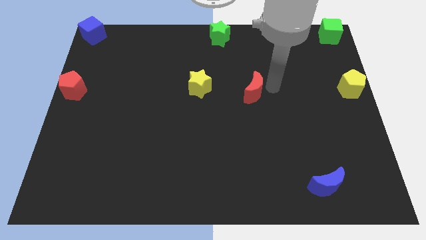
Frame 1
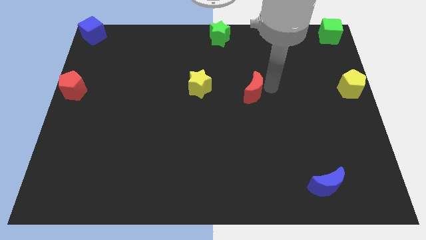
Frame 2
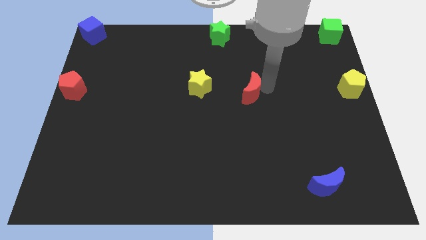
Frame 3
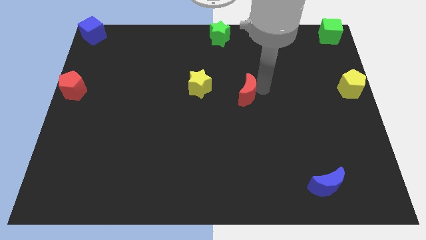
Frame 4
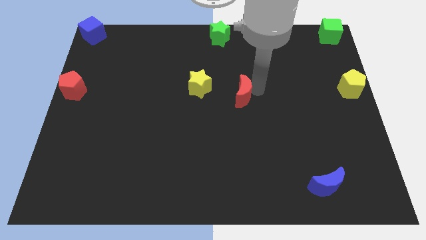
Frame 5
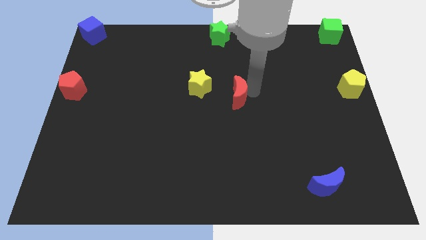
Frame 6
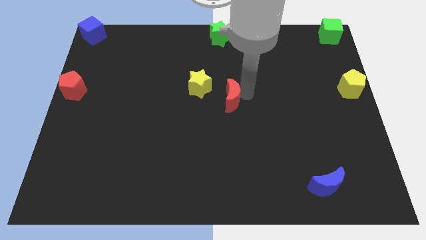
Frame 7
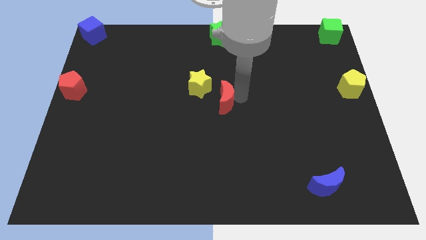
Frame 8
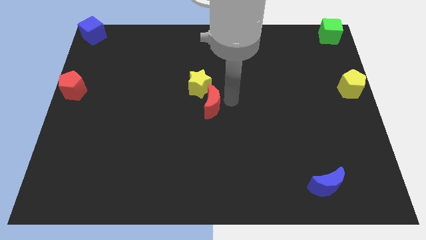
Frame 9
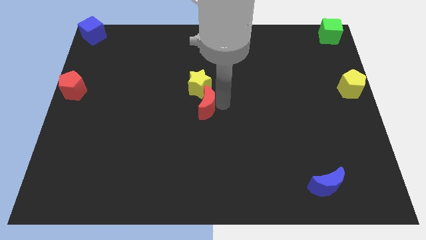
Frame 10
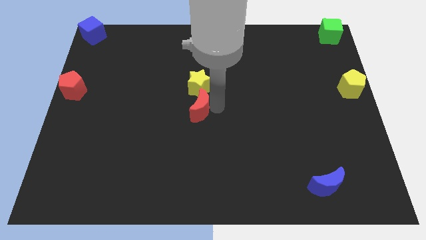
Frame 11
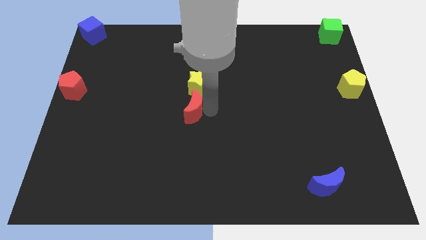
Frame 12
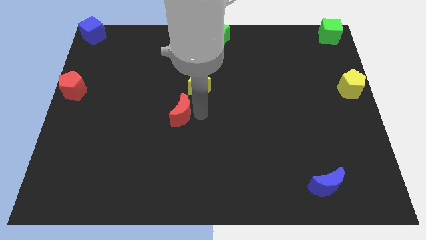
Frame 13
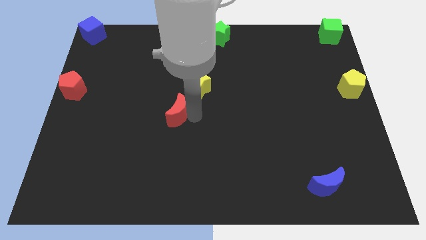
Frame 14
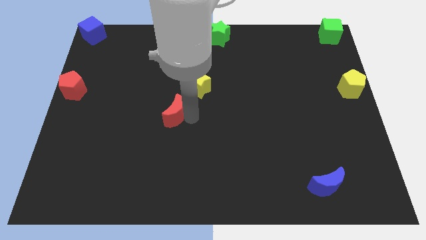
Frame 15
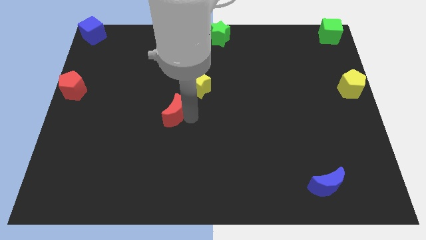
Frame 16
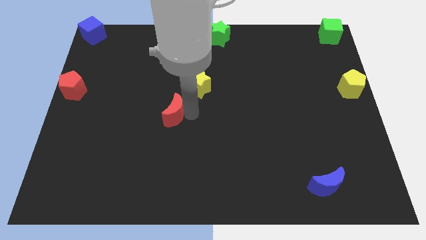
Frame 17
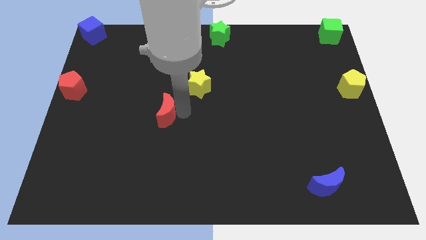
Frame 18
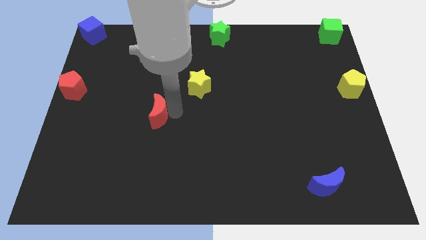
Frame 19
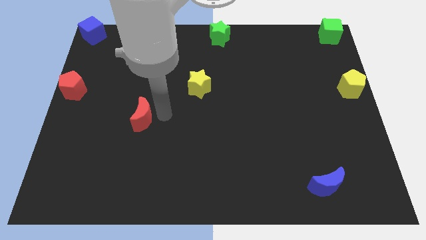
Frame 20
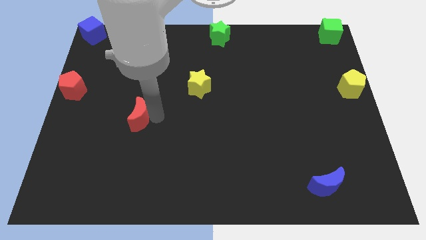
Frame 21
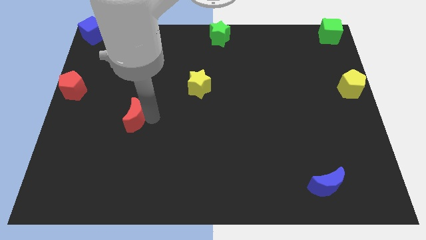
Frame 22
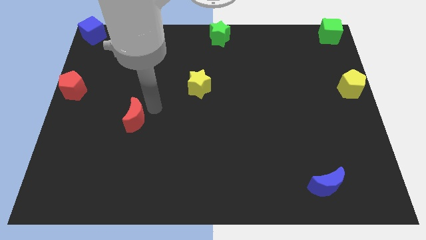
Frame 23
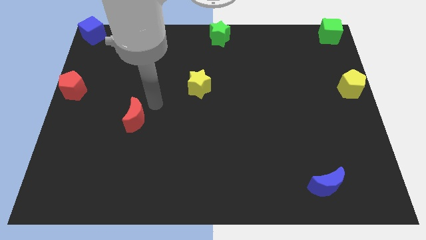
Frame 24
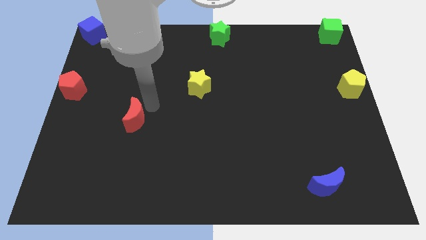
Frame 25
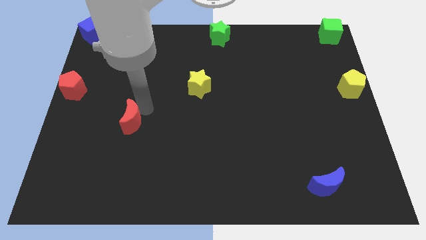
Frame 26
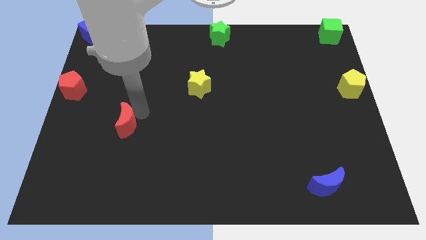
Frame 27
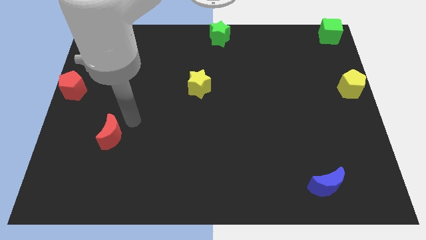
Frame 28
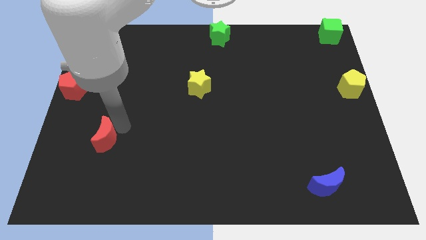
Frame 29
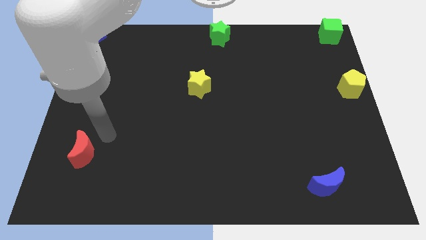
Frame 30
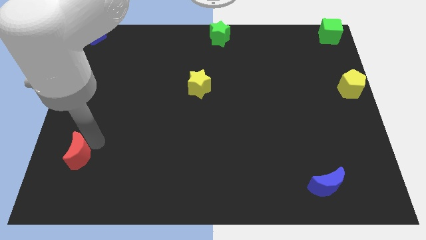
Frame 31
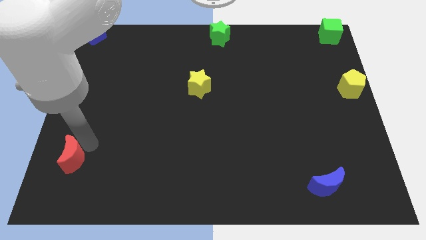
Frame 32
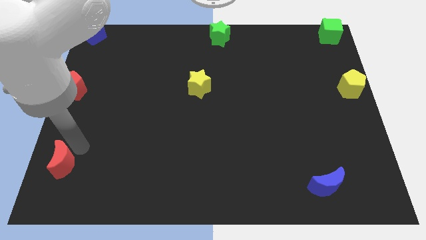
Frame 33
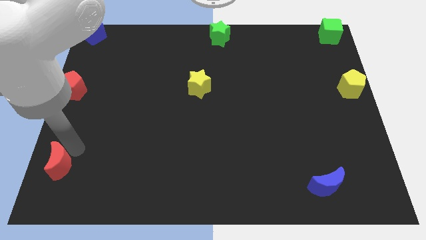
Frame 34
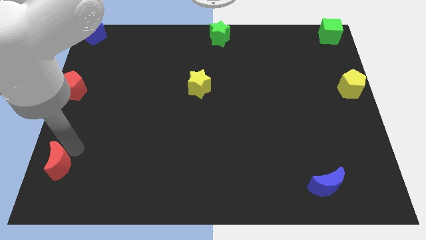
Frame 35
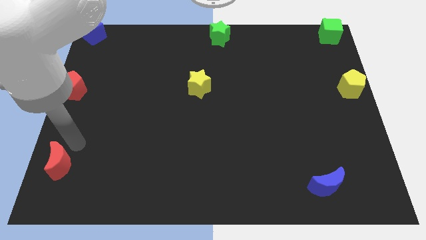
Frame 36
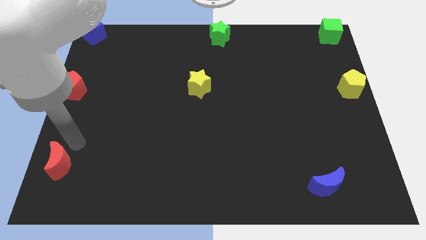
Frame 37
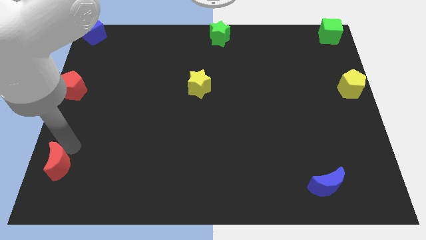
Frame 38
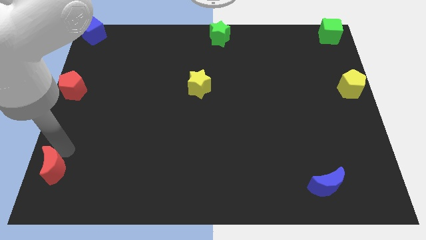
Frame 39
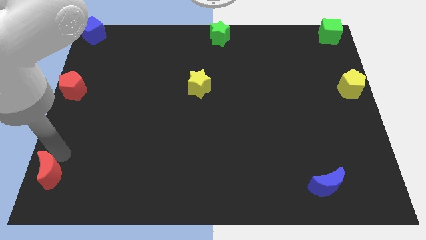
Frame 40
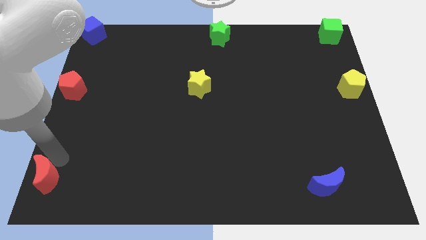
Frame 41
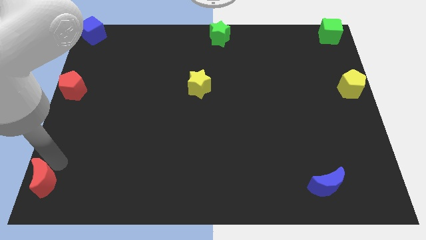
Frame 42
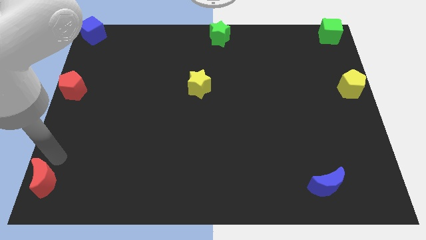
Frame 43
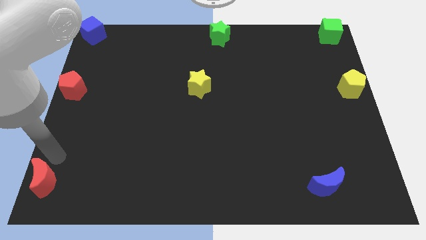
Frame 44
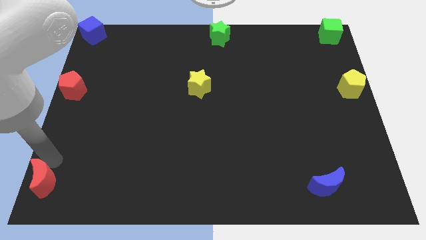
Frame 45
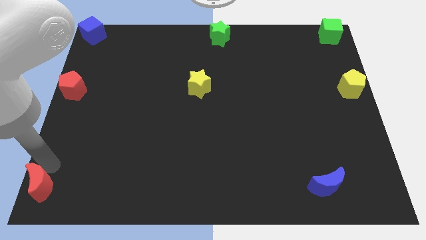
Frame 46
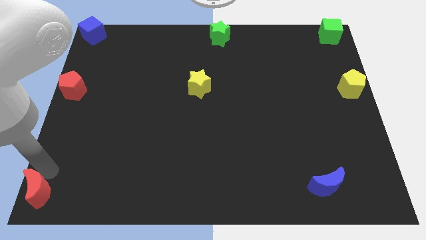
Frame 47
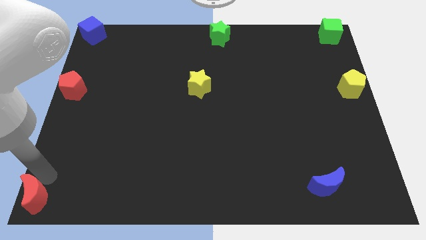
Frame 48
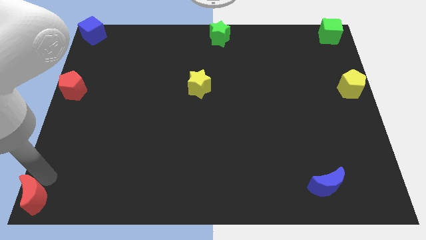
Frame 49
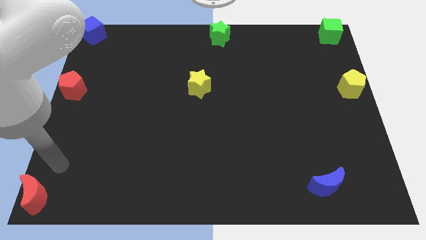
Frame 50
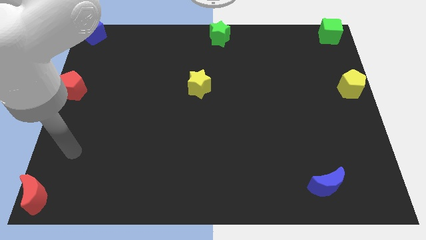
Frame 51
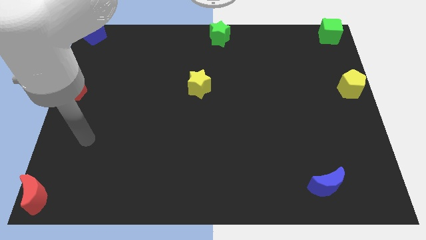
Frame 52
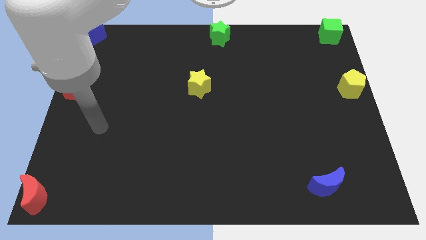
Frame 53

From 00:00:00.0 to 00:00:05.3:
slide the red moon to the bottom left corner of the board

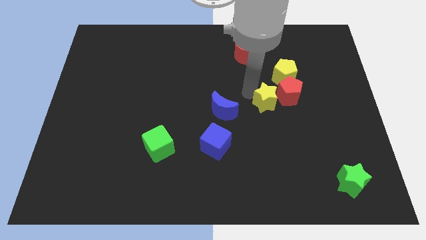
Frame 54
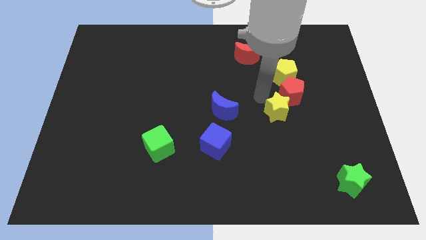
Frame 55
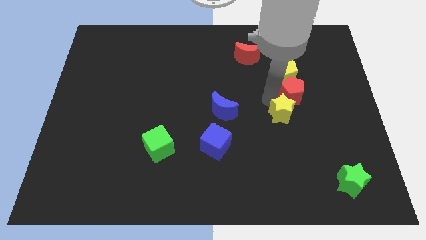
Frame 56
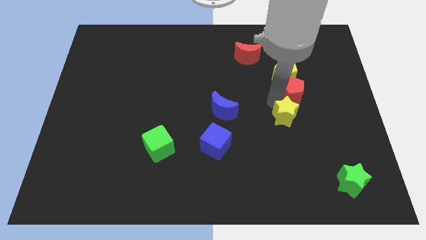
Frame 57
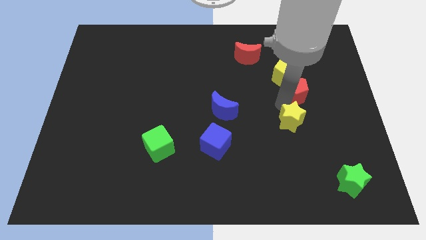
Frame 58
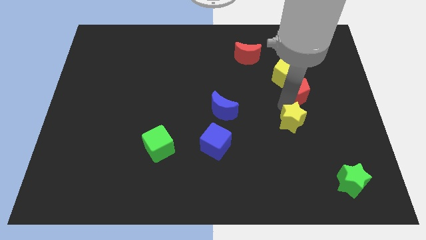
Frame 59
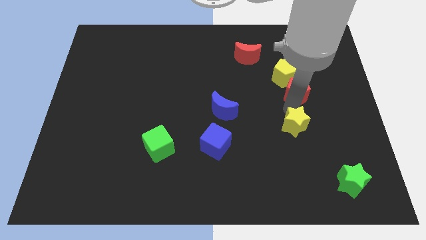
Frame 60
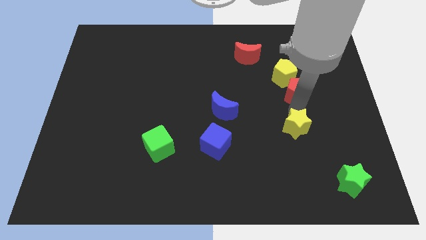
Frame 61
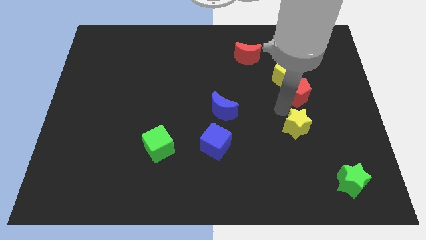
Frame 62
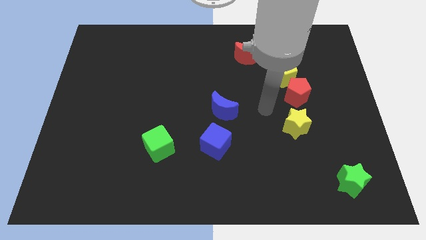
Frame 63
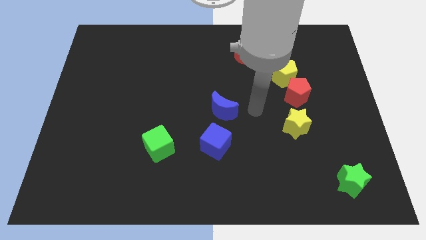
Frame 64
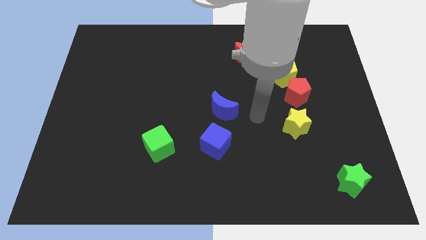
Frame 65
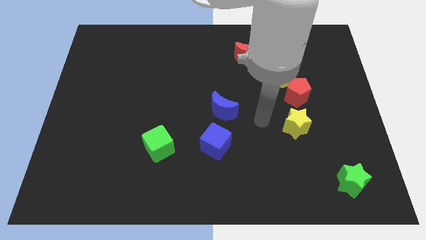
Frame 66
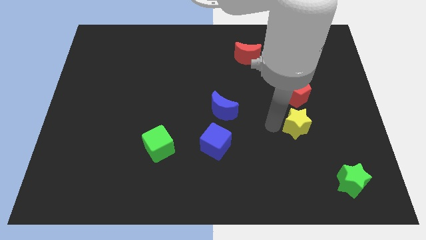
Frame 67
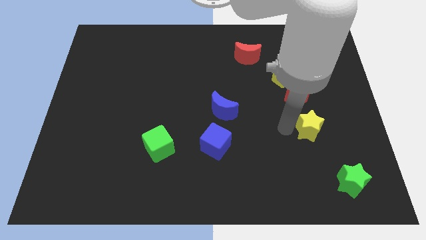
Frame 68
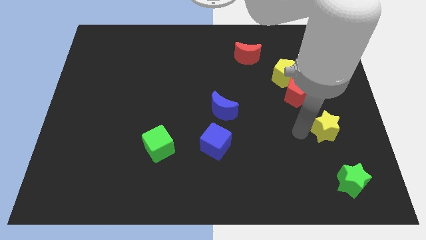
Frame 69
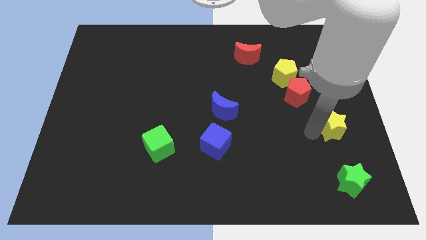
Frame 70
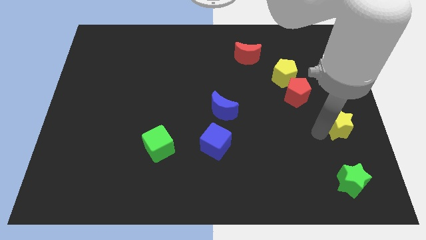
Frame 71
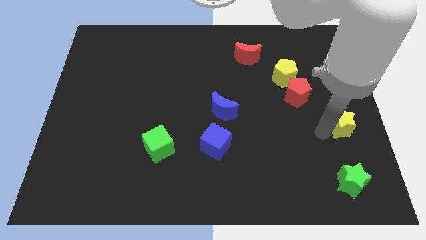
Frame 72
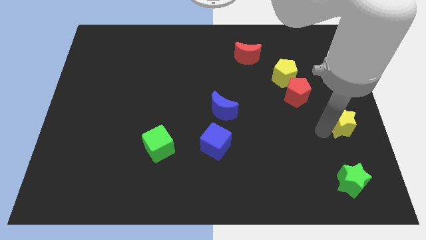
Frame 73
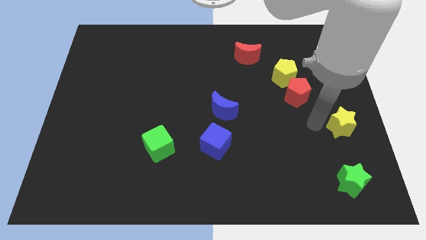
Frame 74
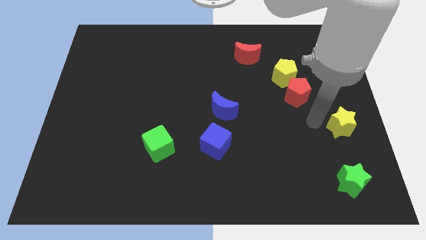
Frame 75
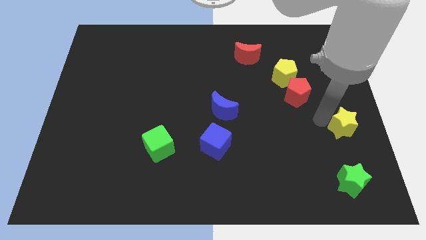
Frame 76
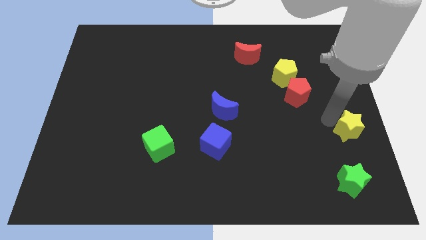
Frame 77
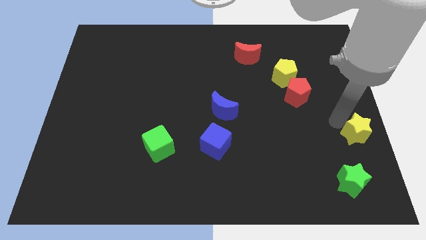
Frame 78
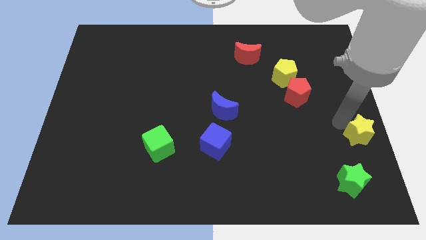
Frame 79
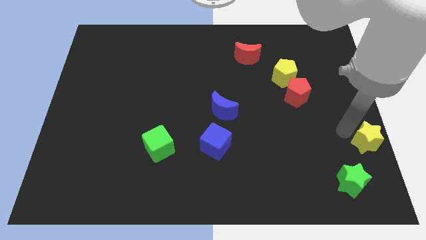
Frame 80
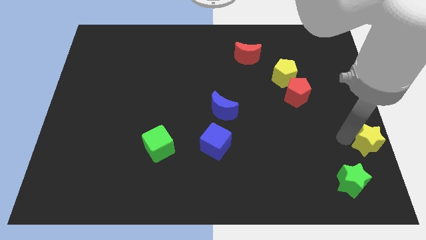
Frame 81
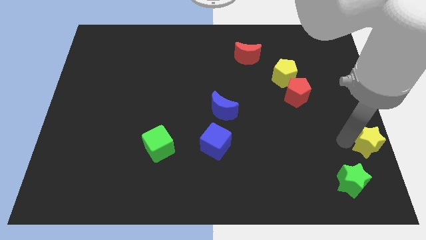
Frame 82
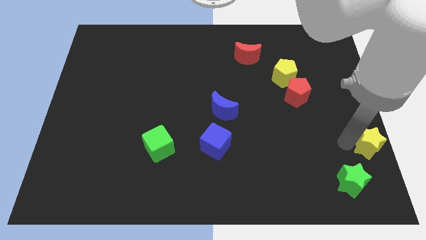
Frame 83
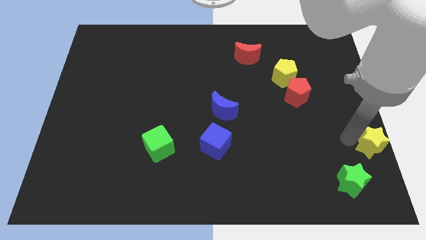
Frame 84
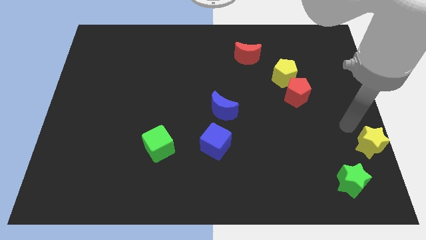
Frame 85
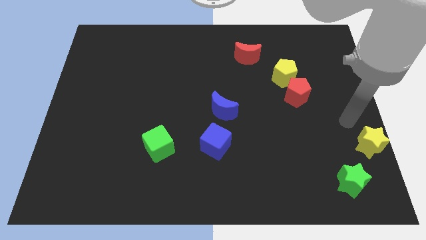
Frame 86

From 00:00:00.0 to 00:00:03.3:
place the yellow star at the top right side of green star

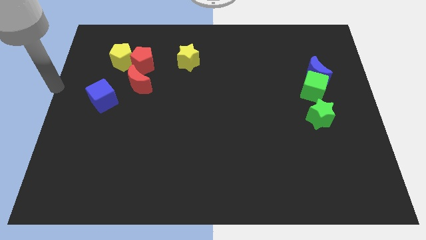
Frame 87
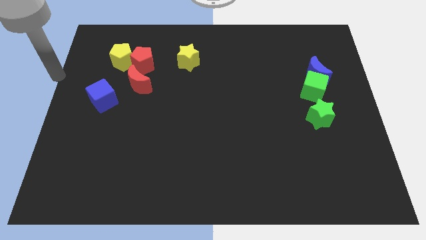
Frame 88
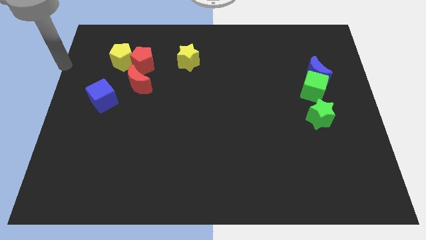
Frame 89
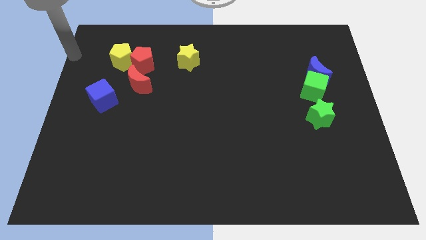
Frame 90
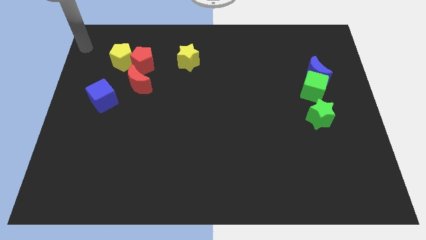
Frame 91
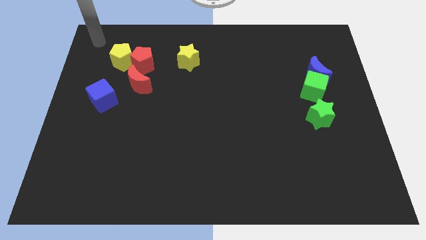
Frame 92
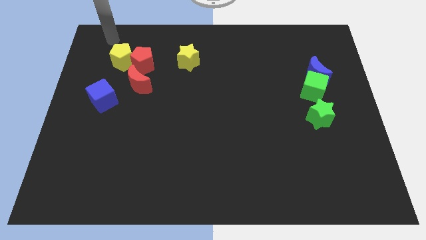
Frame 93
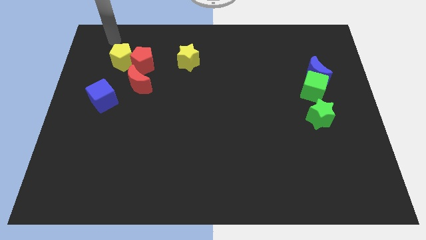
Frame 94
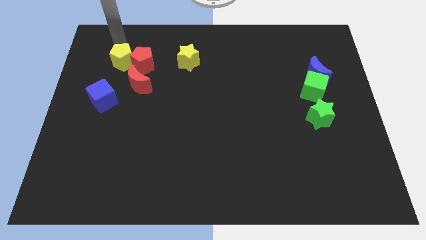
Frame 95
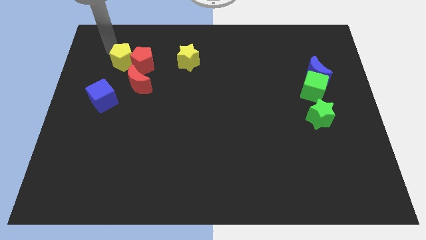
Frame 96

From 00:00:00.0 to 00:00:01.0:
point your arm above yellow pentagon
